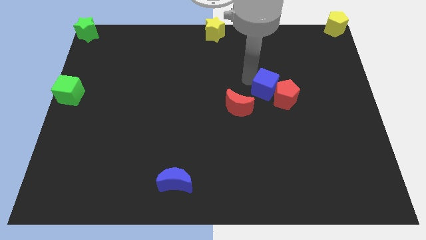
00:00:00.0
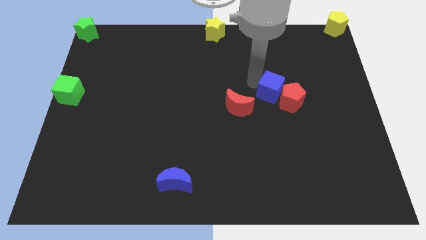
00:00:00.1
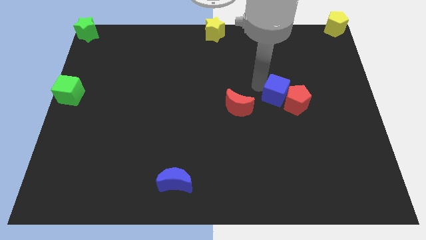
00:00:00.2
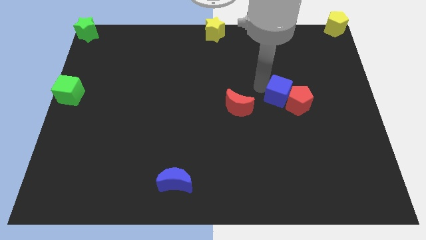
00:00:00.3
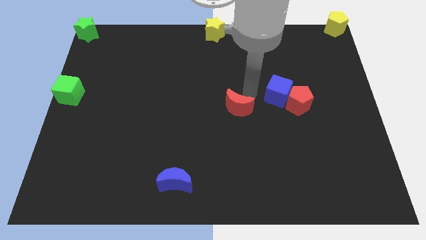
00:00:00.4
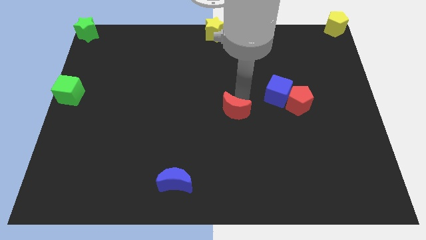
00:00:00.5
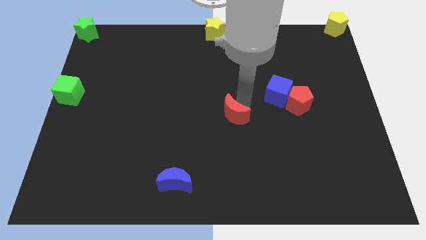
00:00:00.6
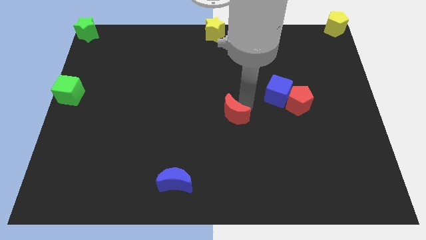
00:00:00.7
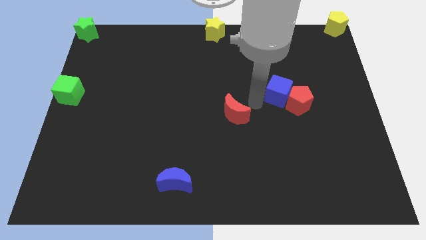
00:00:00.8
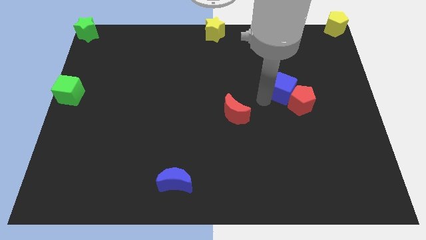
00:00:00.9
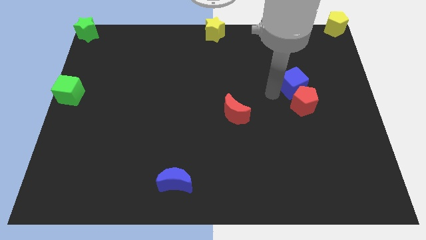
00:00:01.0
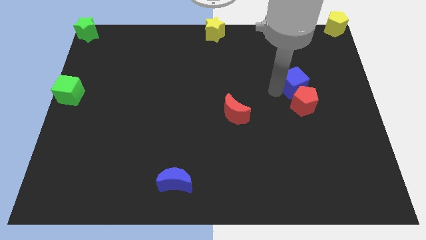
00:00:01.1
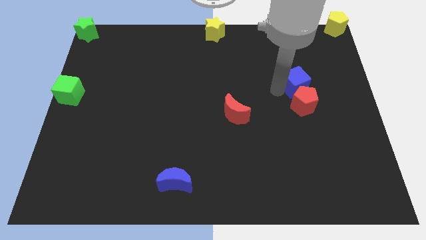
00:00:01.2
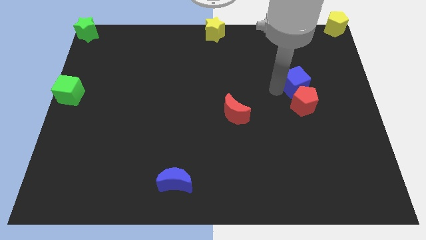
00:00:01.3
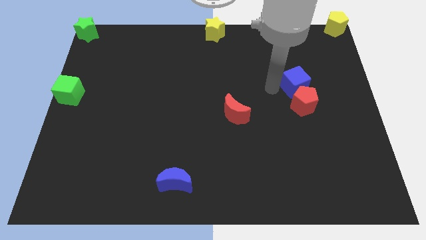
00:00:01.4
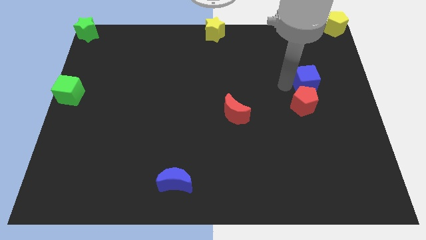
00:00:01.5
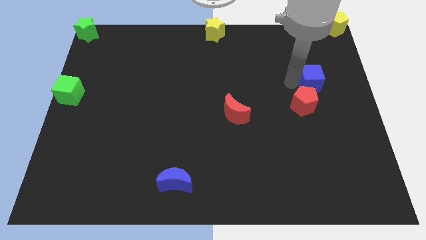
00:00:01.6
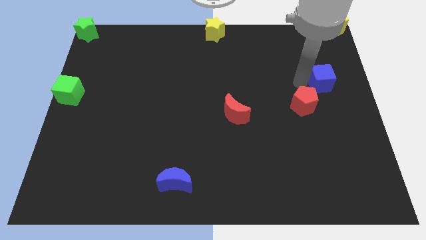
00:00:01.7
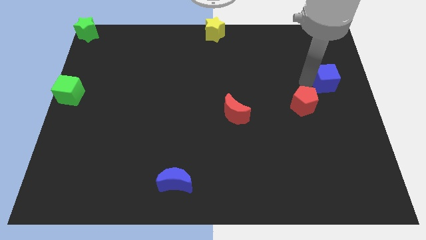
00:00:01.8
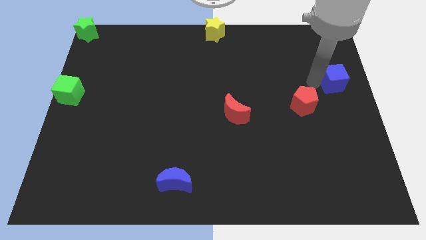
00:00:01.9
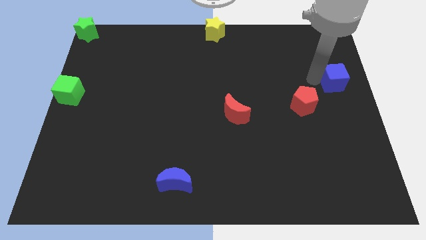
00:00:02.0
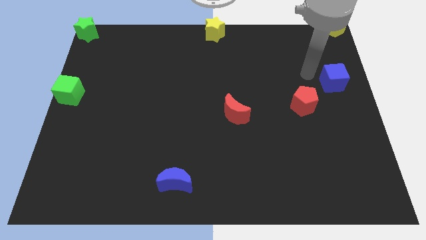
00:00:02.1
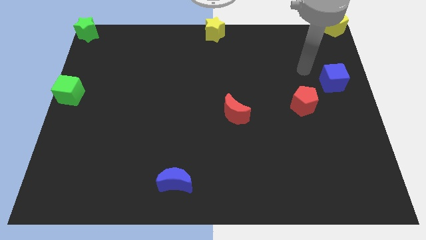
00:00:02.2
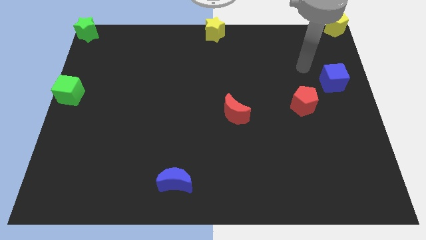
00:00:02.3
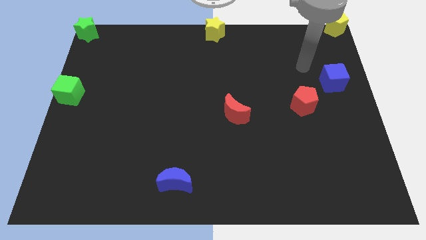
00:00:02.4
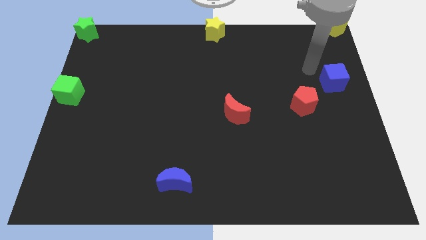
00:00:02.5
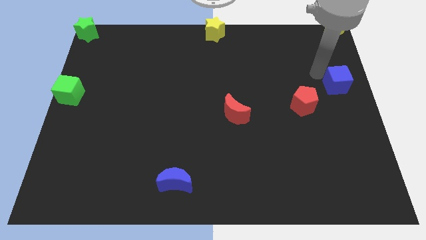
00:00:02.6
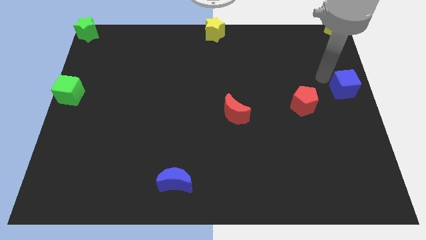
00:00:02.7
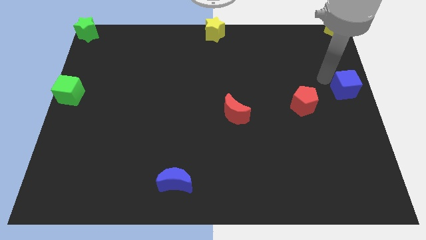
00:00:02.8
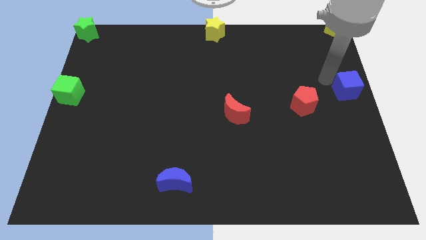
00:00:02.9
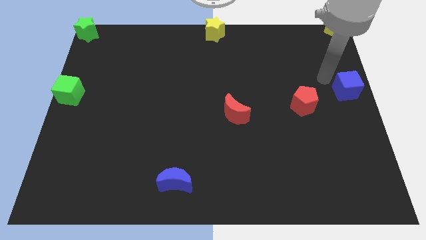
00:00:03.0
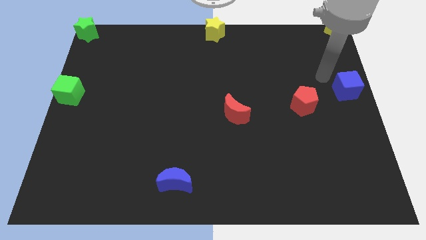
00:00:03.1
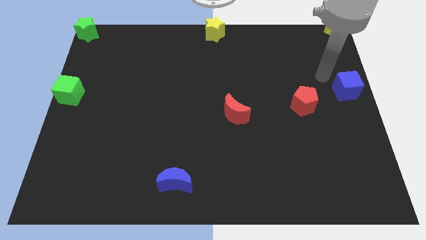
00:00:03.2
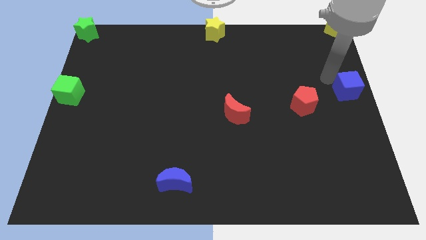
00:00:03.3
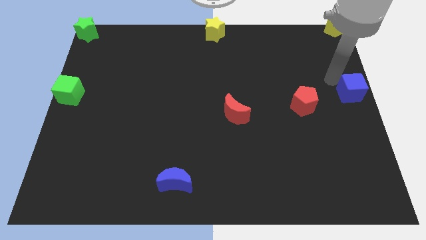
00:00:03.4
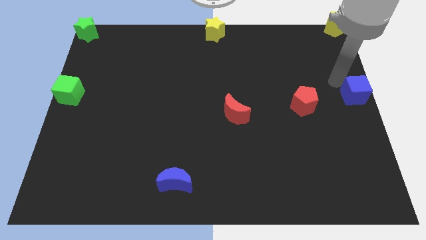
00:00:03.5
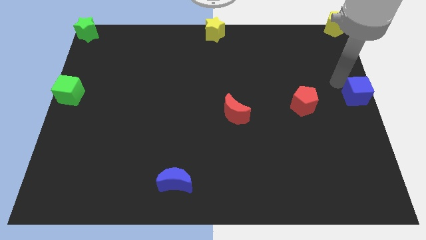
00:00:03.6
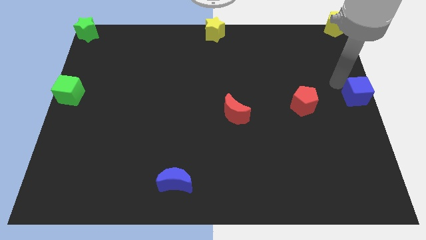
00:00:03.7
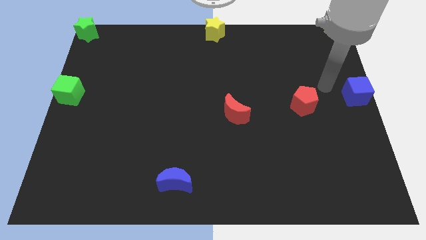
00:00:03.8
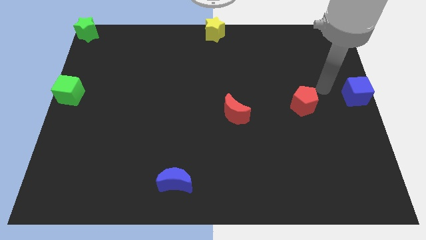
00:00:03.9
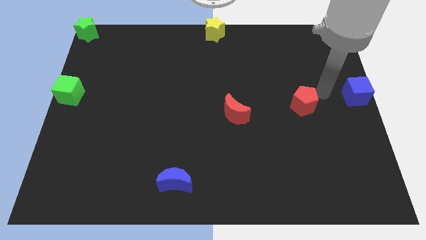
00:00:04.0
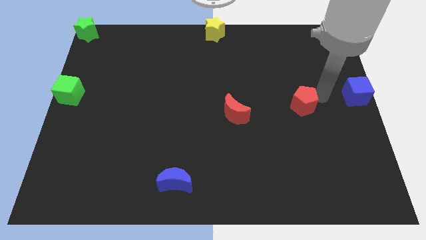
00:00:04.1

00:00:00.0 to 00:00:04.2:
move blue cube to right center of the board

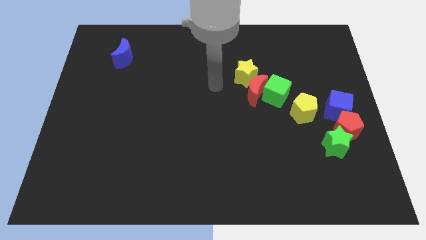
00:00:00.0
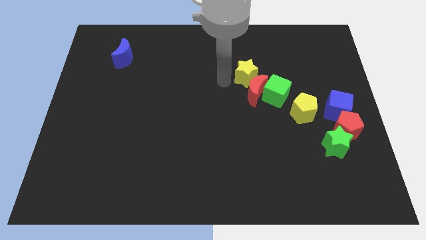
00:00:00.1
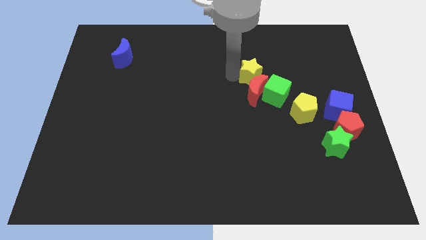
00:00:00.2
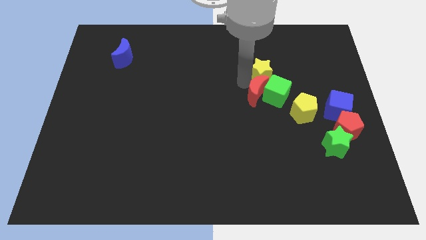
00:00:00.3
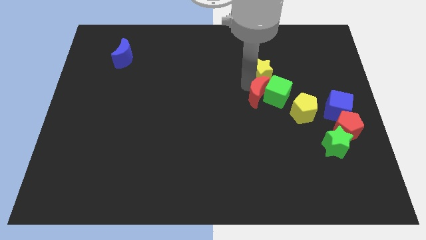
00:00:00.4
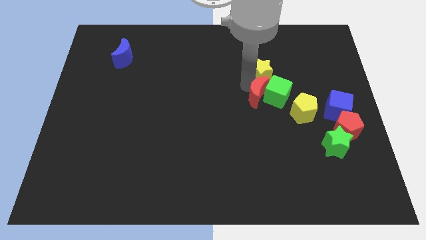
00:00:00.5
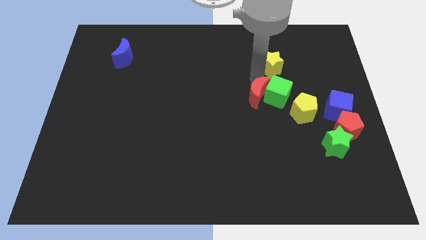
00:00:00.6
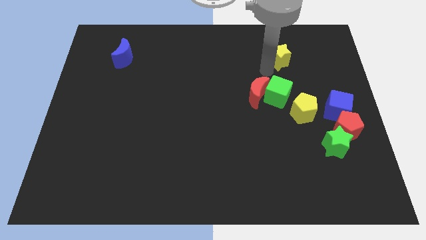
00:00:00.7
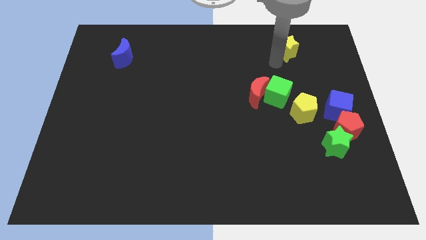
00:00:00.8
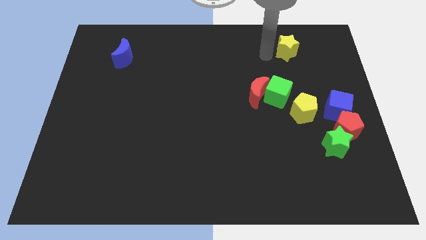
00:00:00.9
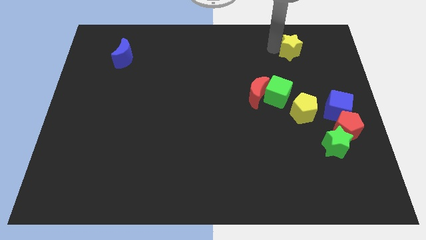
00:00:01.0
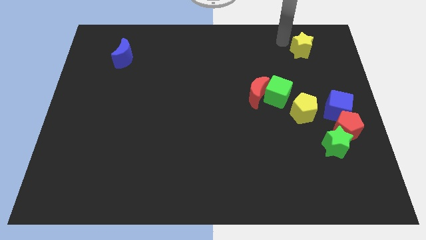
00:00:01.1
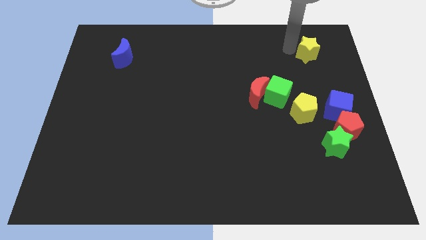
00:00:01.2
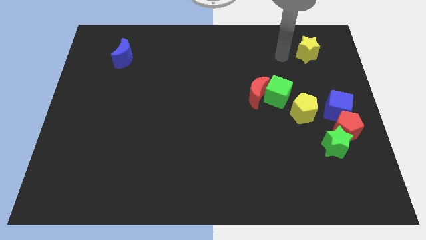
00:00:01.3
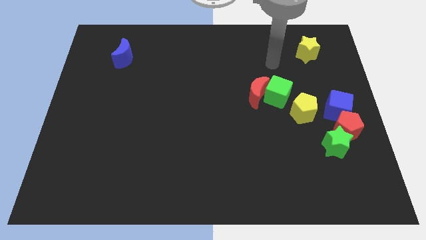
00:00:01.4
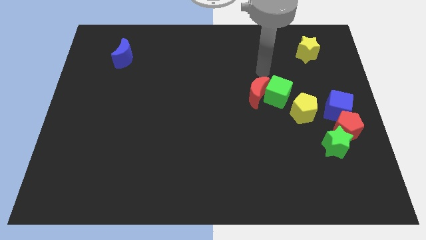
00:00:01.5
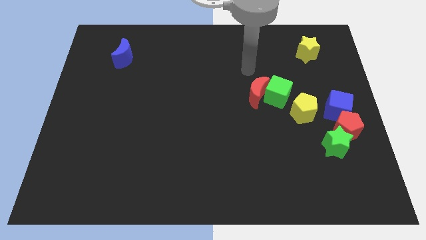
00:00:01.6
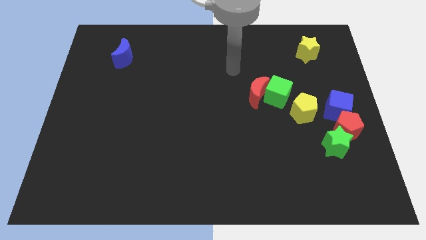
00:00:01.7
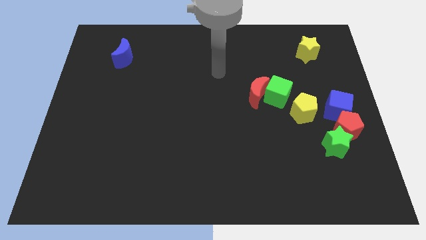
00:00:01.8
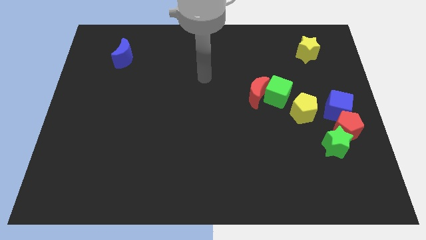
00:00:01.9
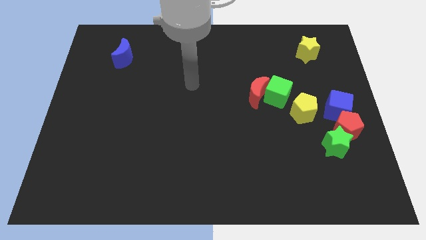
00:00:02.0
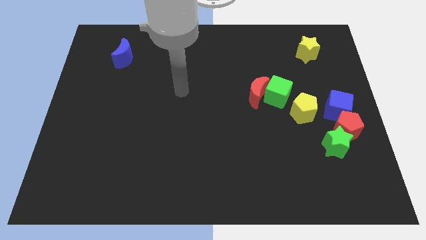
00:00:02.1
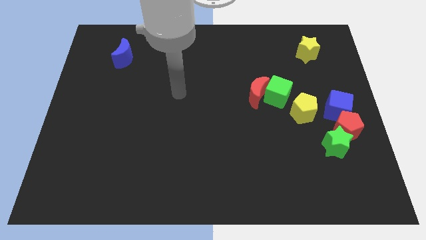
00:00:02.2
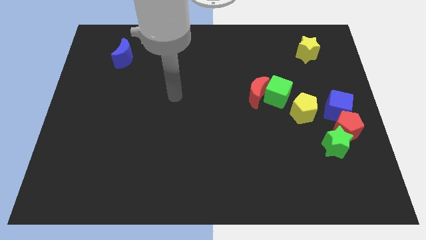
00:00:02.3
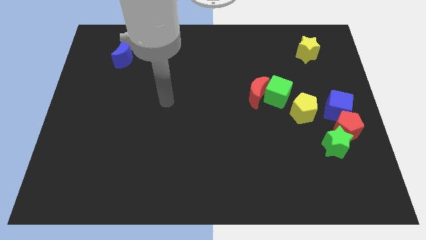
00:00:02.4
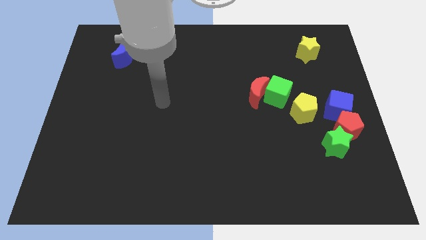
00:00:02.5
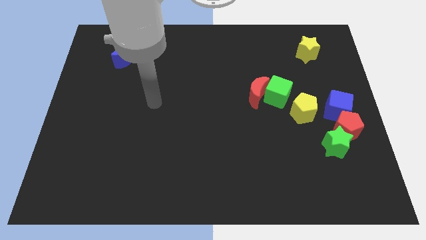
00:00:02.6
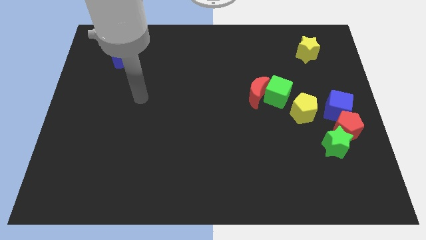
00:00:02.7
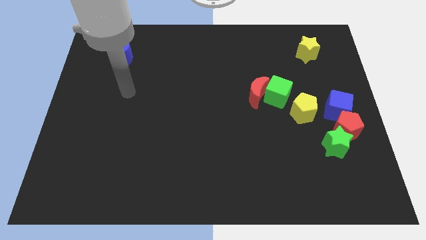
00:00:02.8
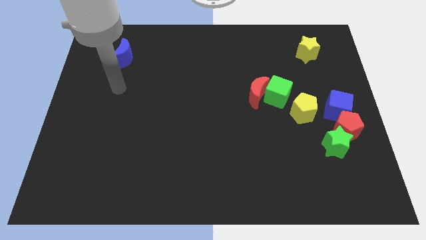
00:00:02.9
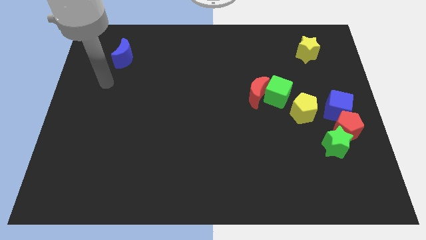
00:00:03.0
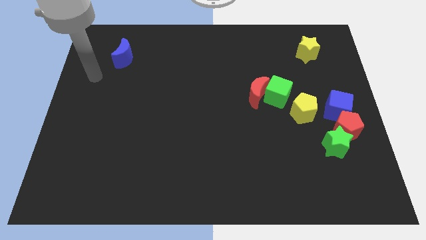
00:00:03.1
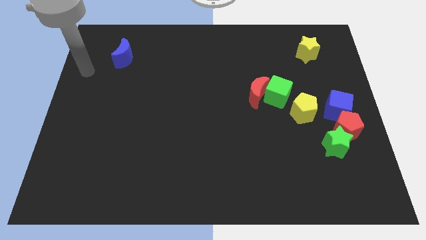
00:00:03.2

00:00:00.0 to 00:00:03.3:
separate the yellow star from red crescent

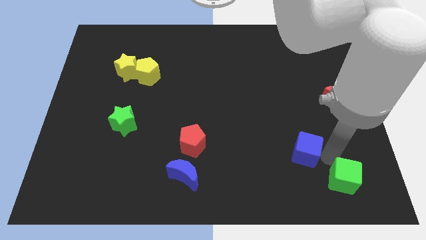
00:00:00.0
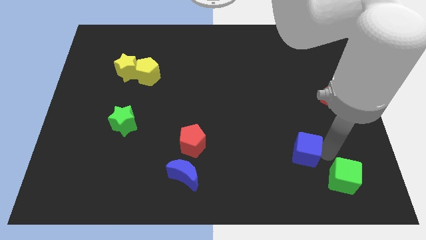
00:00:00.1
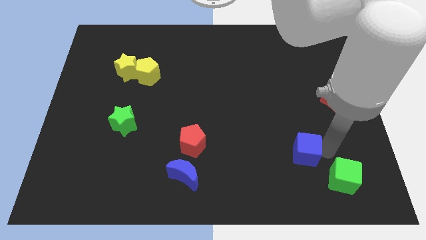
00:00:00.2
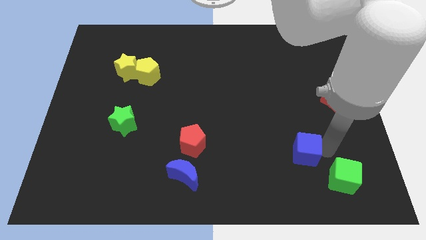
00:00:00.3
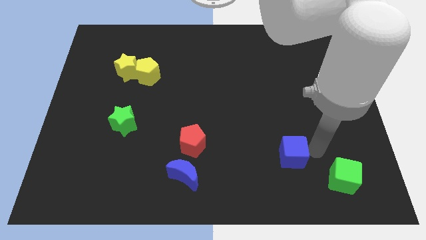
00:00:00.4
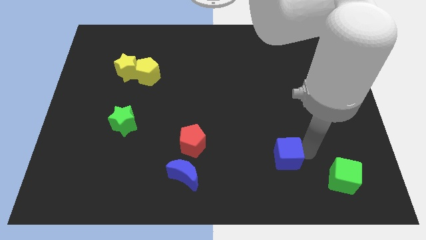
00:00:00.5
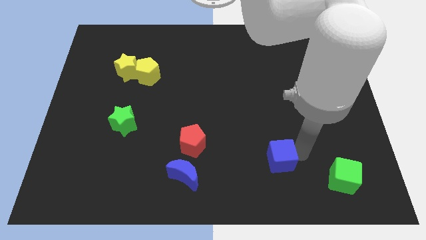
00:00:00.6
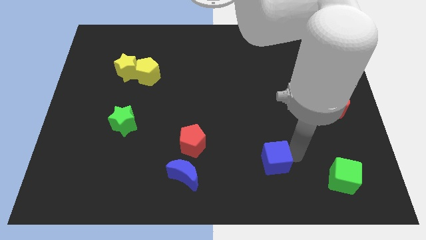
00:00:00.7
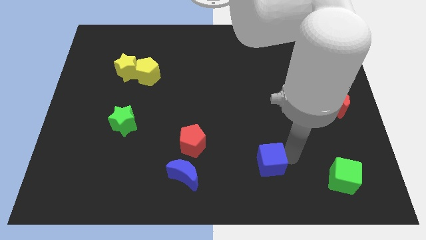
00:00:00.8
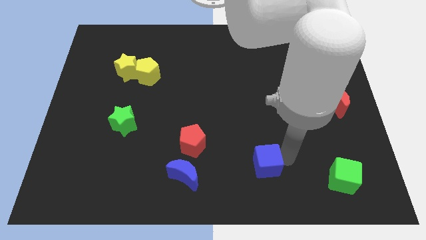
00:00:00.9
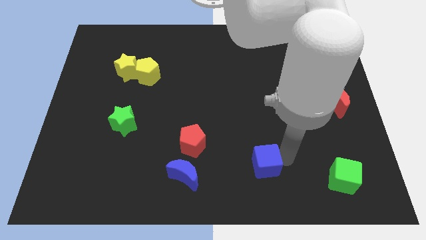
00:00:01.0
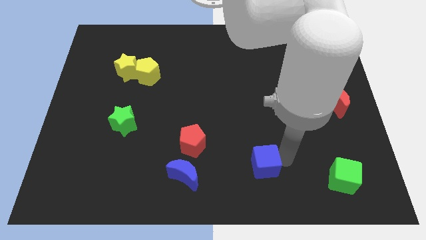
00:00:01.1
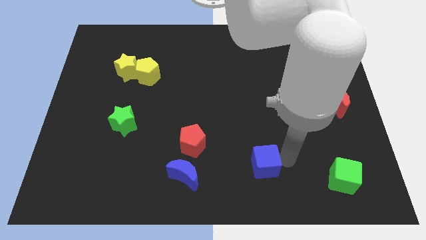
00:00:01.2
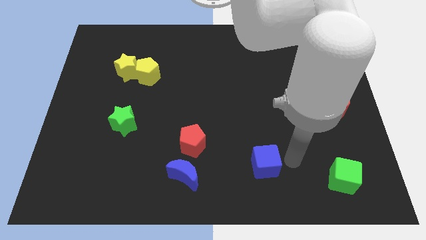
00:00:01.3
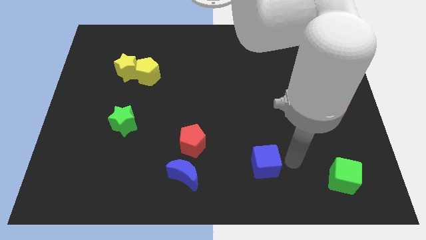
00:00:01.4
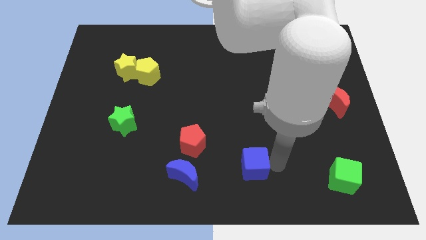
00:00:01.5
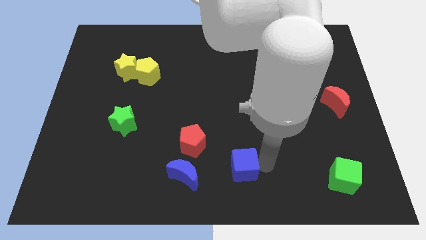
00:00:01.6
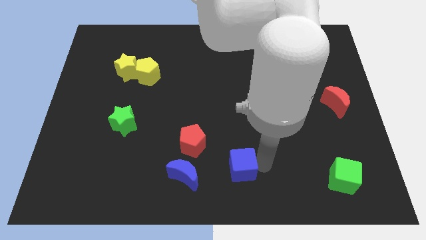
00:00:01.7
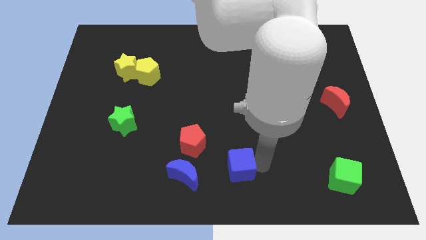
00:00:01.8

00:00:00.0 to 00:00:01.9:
push the blue cube slightly towards the left
